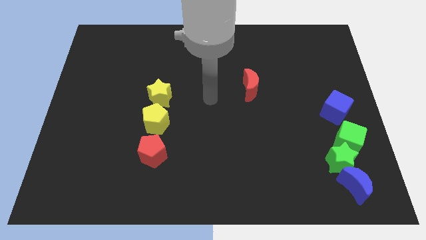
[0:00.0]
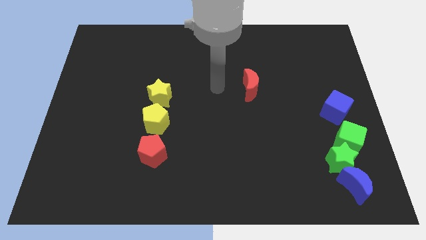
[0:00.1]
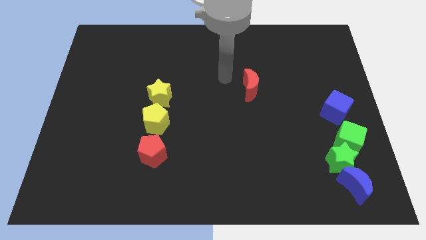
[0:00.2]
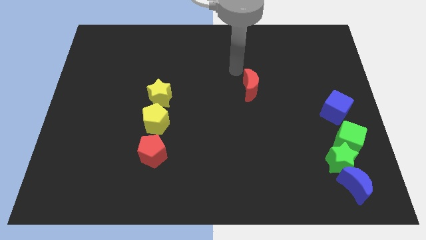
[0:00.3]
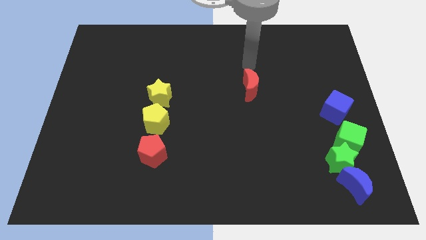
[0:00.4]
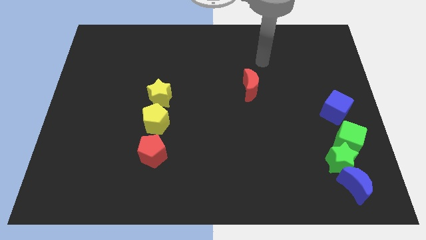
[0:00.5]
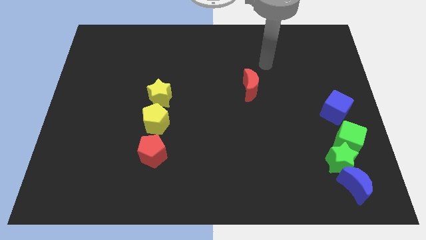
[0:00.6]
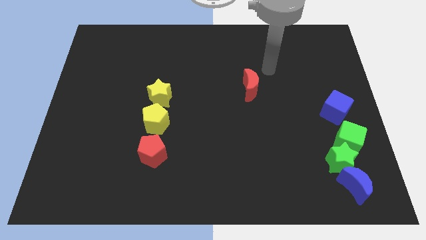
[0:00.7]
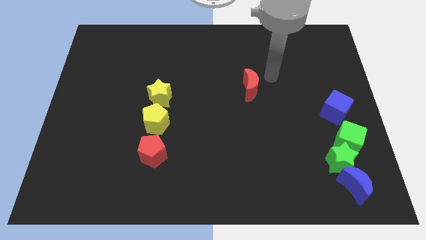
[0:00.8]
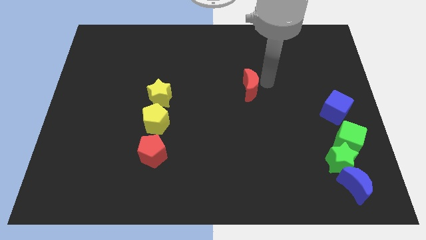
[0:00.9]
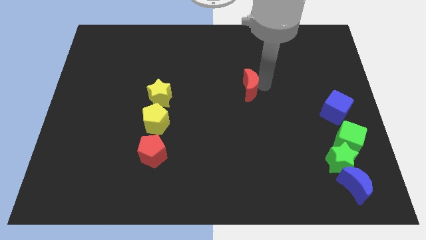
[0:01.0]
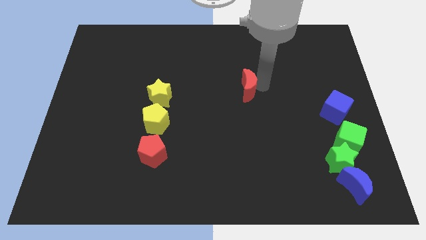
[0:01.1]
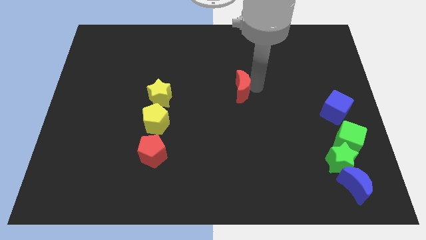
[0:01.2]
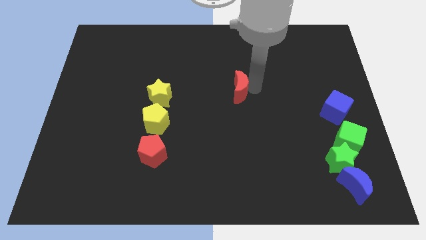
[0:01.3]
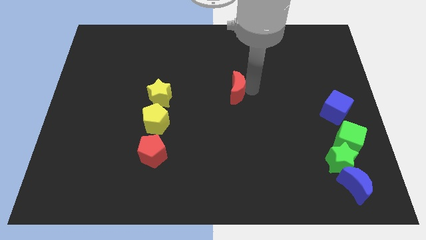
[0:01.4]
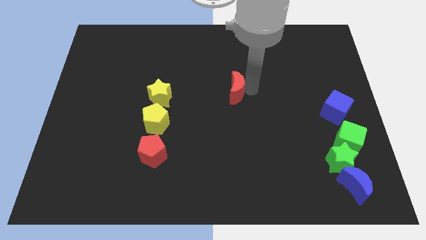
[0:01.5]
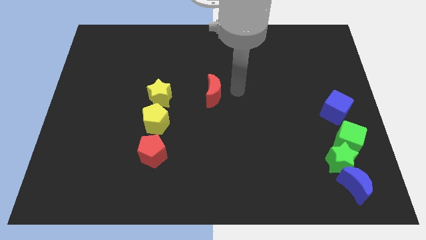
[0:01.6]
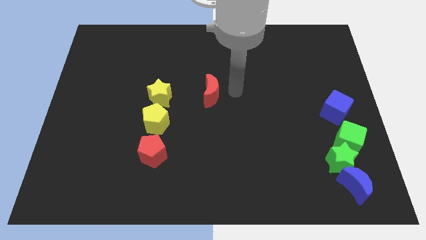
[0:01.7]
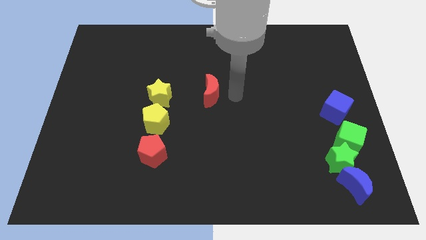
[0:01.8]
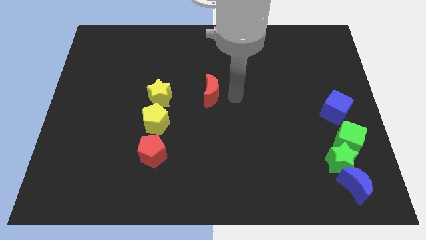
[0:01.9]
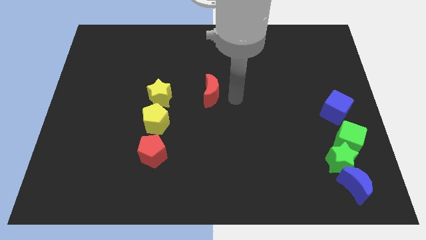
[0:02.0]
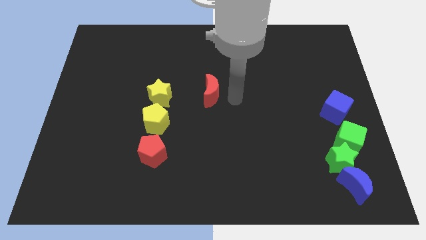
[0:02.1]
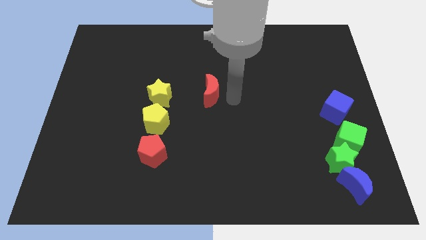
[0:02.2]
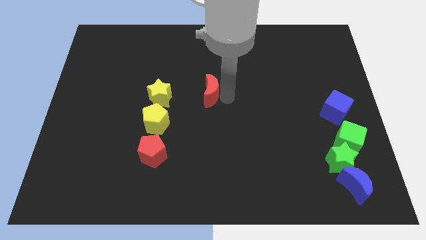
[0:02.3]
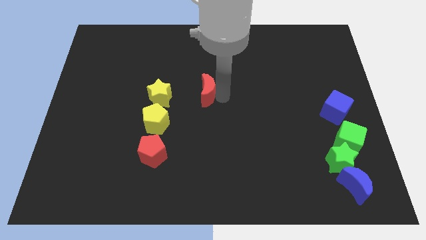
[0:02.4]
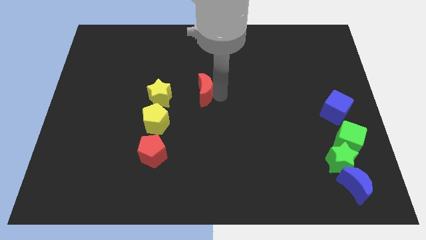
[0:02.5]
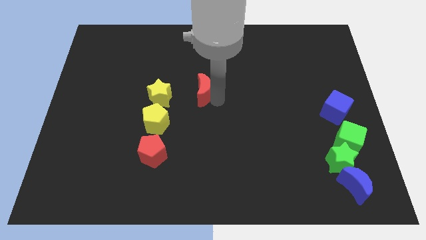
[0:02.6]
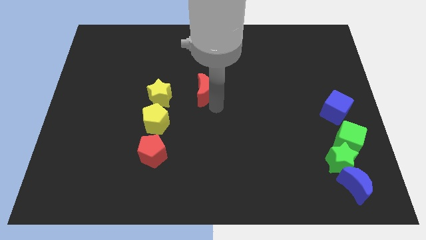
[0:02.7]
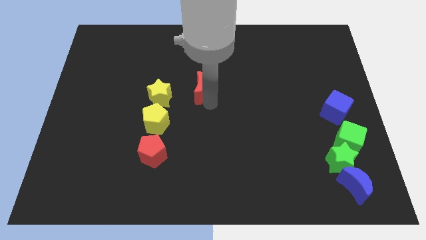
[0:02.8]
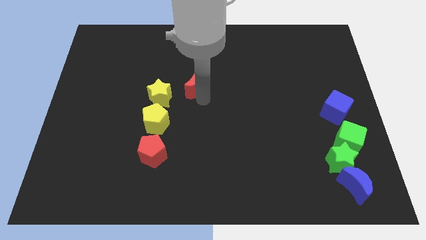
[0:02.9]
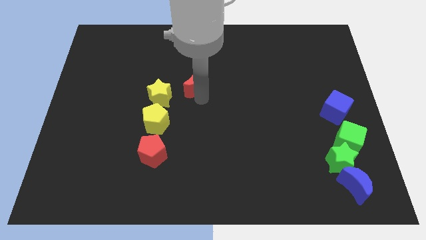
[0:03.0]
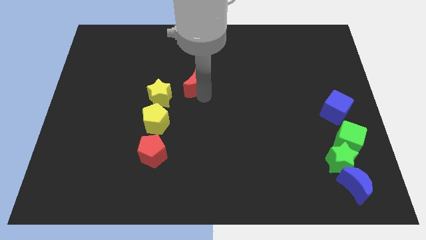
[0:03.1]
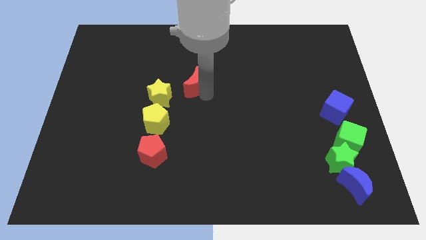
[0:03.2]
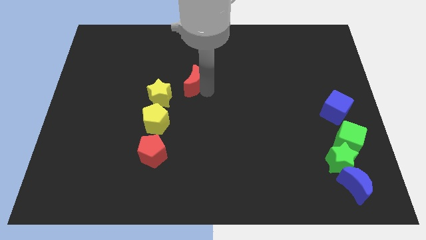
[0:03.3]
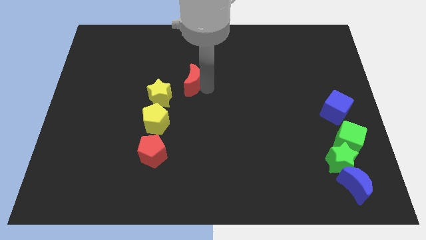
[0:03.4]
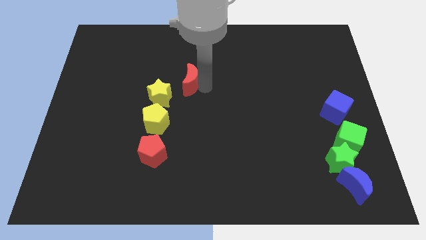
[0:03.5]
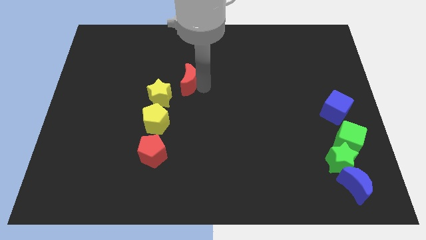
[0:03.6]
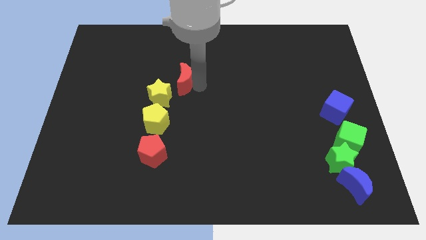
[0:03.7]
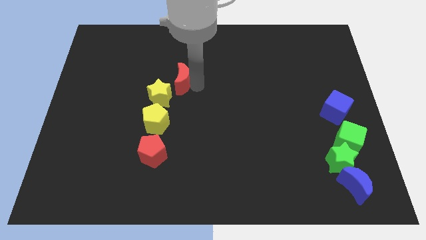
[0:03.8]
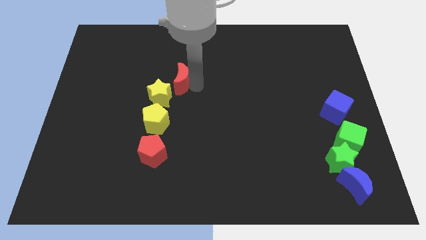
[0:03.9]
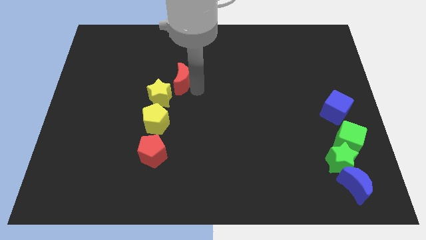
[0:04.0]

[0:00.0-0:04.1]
place red moon to the top right of yellow star

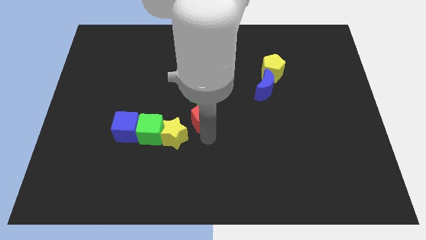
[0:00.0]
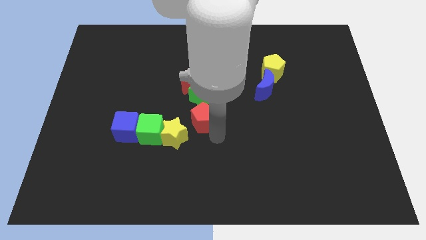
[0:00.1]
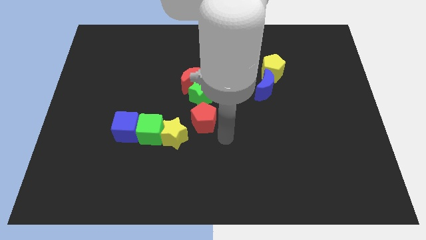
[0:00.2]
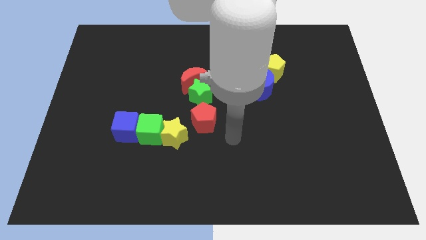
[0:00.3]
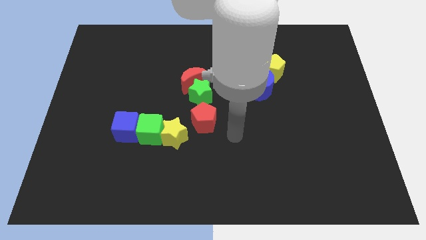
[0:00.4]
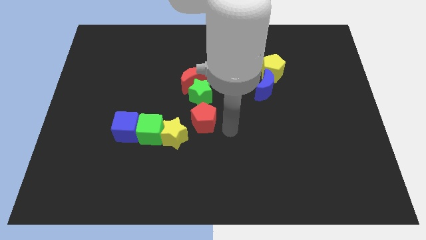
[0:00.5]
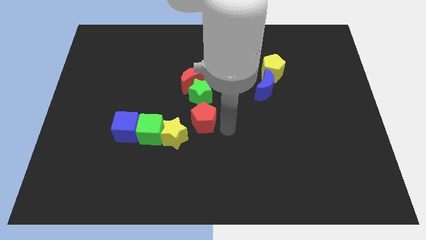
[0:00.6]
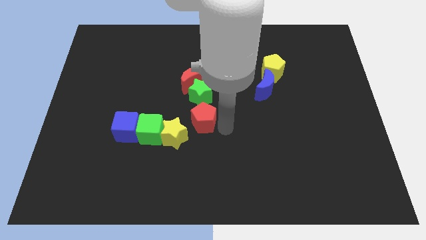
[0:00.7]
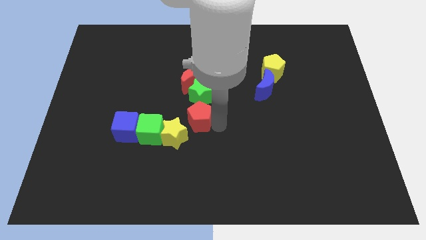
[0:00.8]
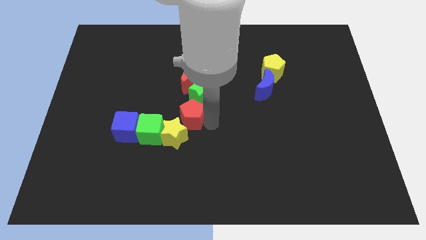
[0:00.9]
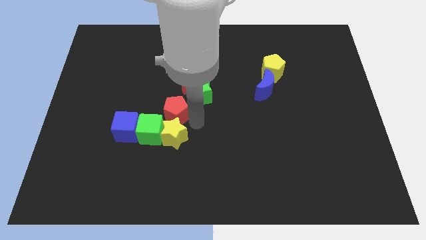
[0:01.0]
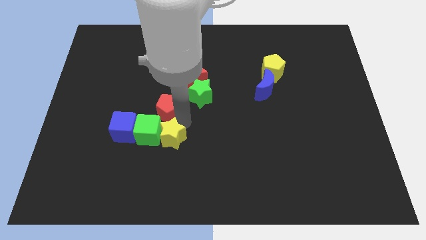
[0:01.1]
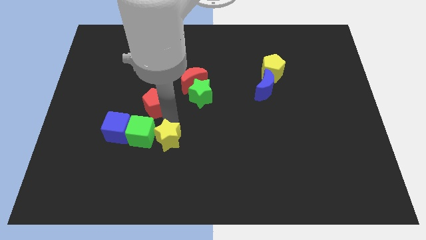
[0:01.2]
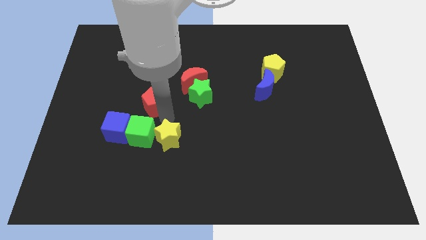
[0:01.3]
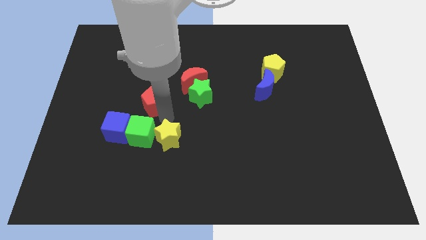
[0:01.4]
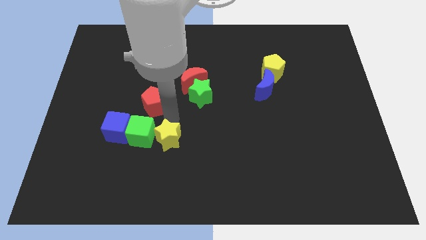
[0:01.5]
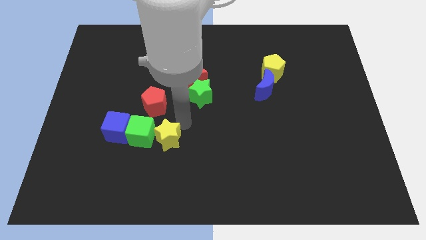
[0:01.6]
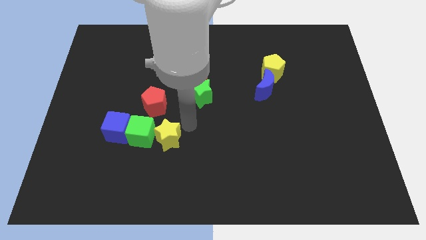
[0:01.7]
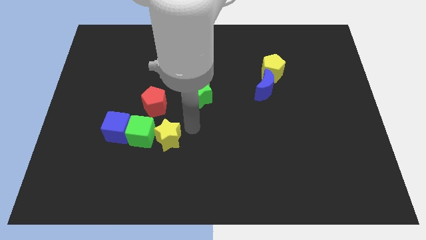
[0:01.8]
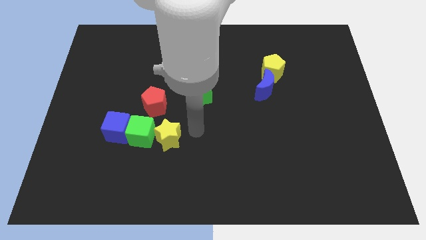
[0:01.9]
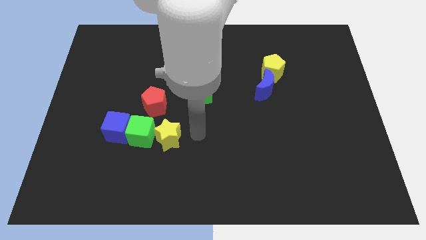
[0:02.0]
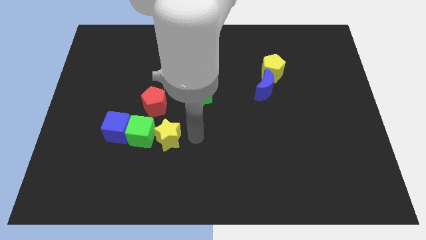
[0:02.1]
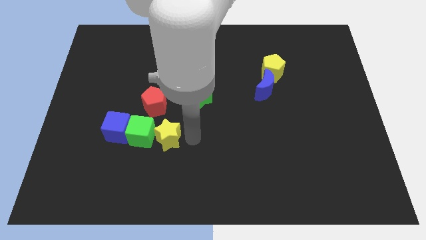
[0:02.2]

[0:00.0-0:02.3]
move the red pentagon above the green cube

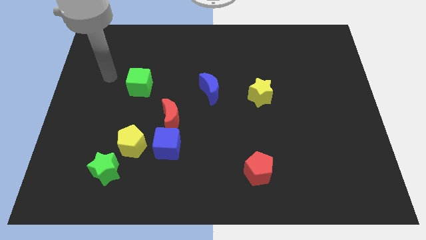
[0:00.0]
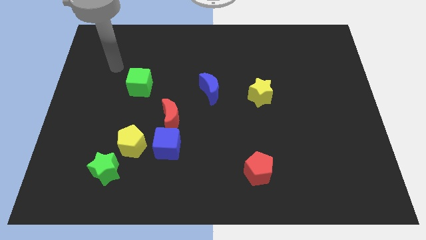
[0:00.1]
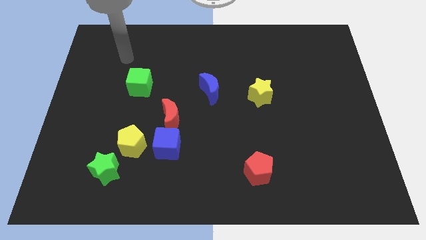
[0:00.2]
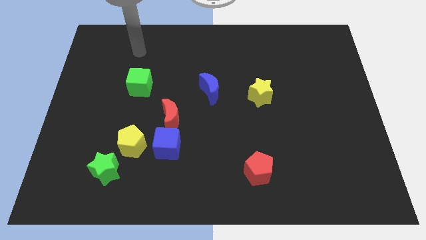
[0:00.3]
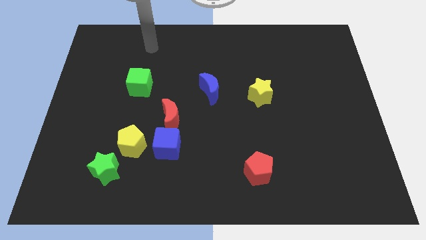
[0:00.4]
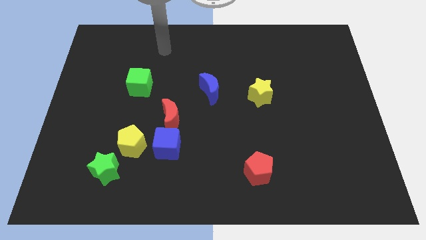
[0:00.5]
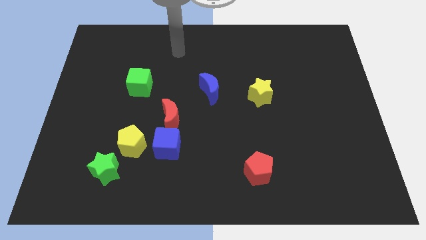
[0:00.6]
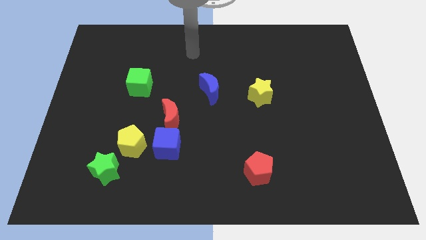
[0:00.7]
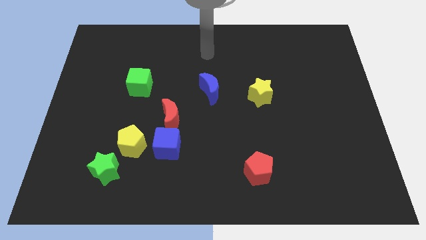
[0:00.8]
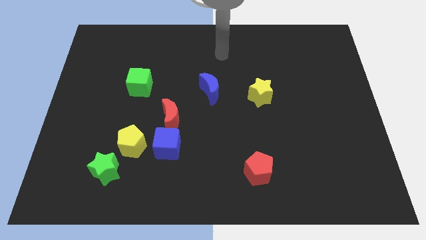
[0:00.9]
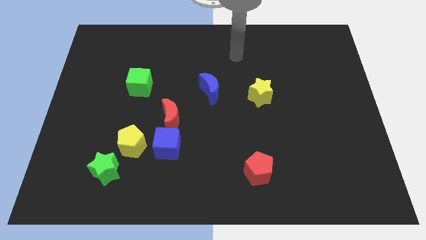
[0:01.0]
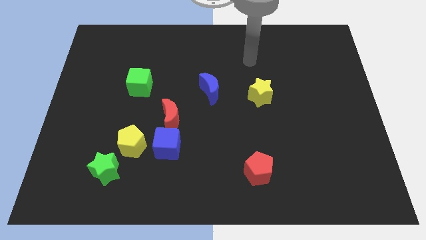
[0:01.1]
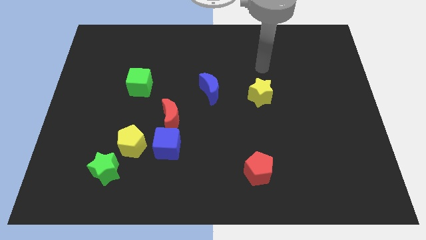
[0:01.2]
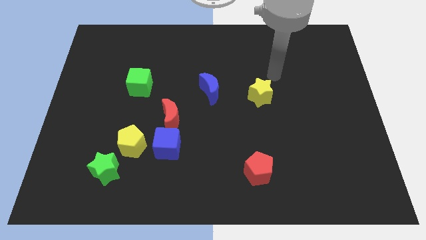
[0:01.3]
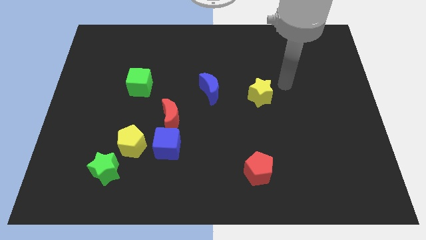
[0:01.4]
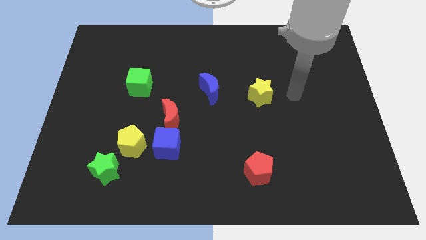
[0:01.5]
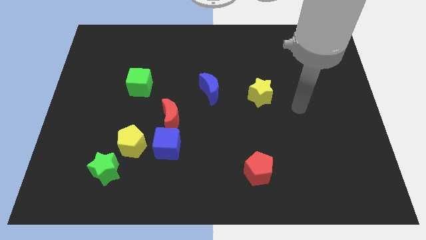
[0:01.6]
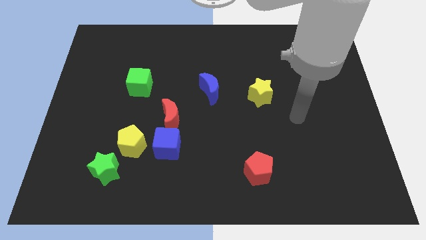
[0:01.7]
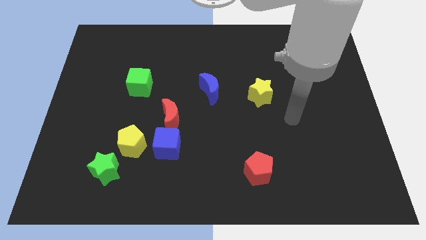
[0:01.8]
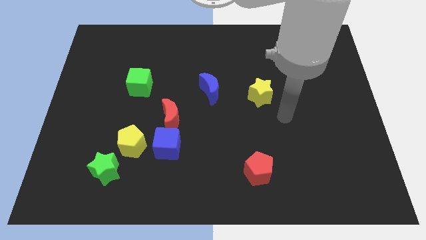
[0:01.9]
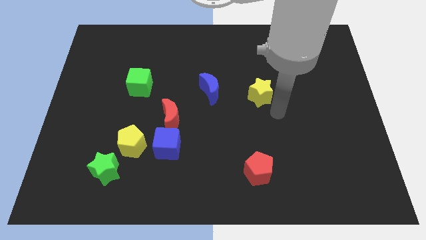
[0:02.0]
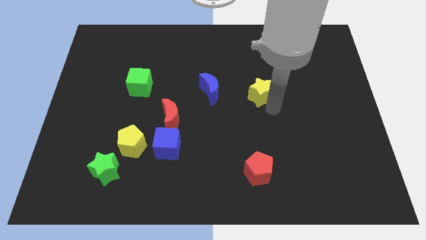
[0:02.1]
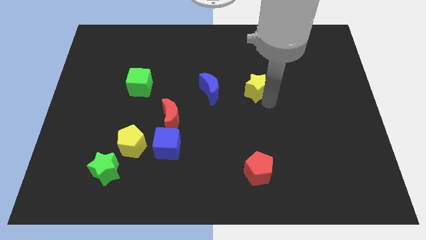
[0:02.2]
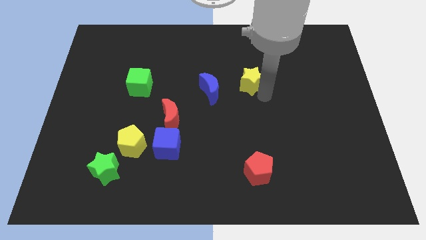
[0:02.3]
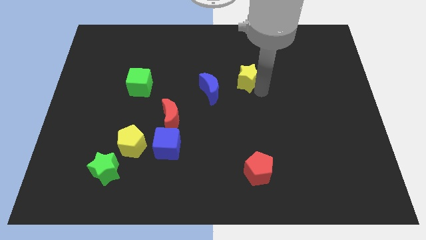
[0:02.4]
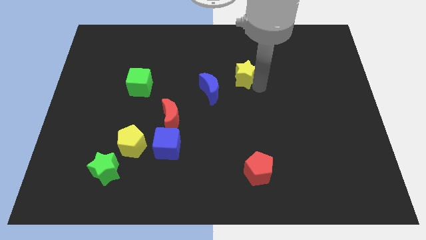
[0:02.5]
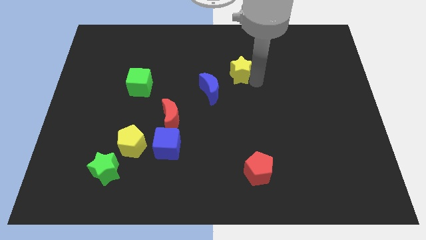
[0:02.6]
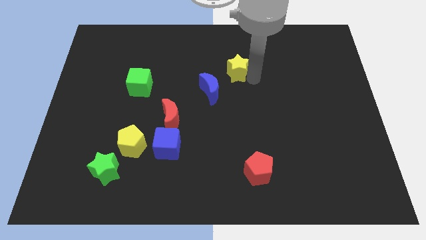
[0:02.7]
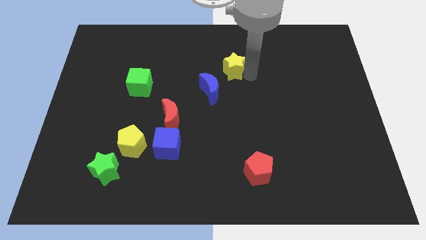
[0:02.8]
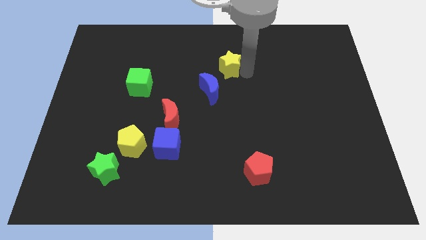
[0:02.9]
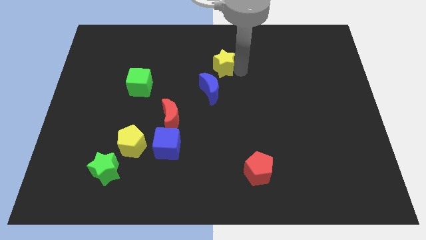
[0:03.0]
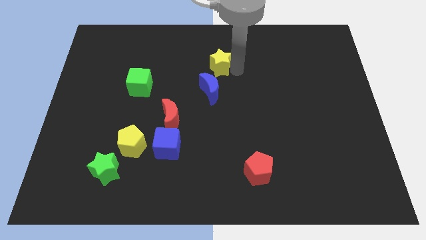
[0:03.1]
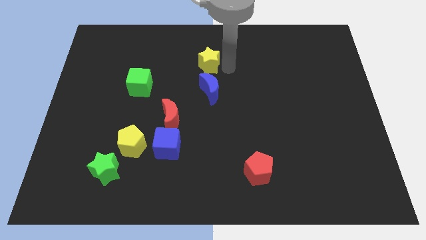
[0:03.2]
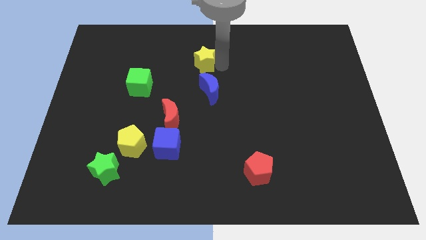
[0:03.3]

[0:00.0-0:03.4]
put the yellow star at the top of the blue moon
